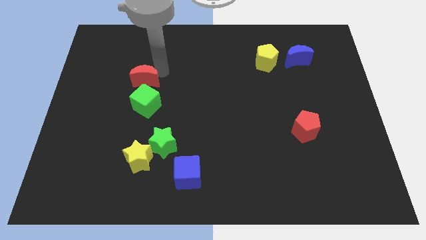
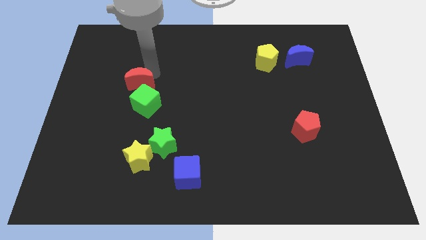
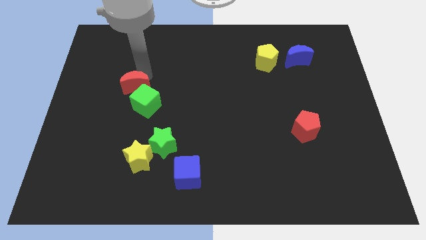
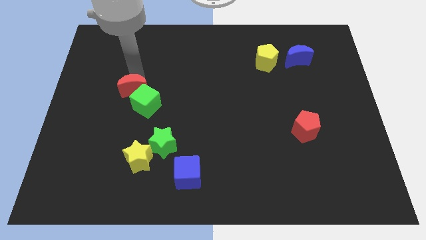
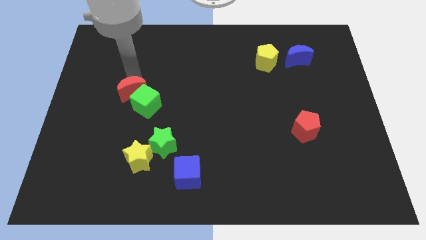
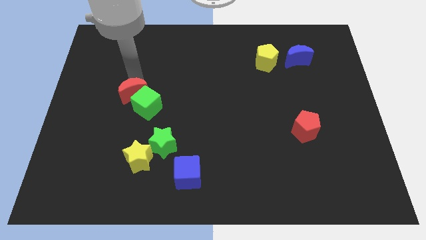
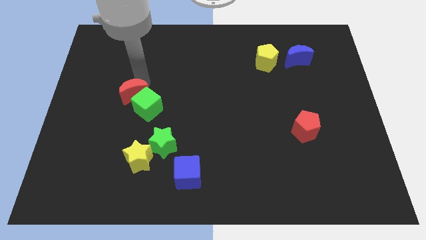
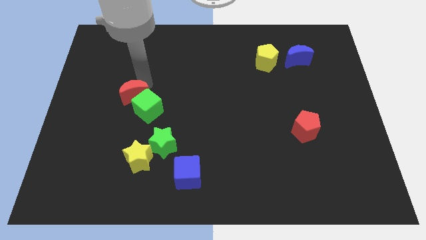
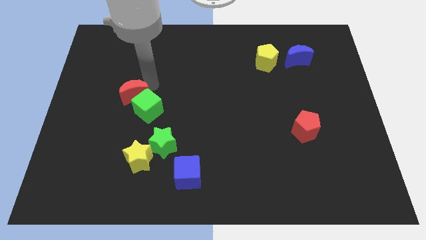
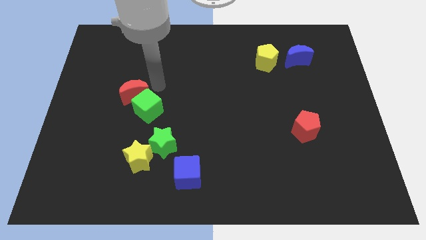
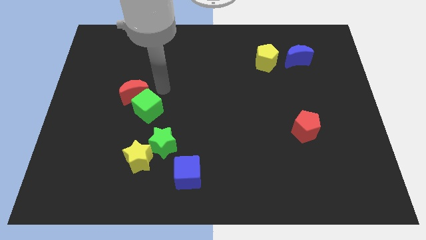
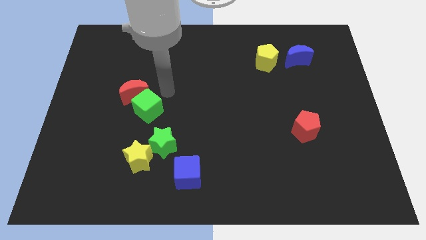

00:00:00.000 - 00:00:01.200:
push the red moon into the green cube

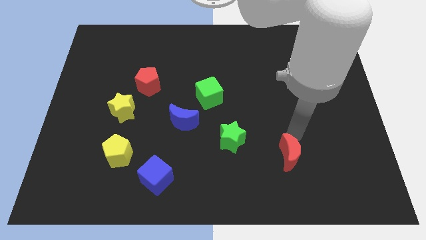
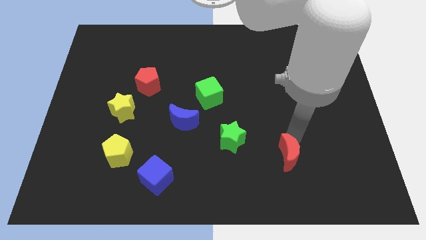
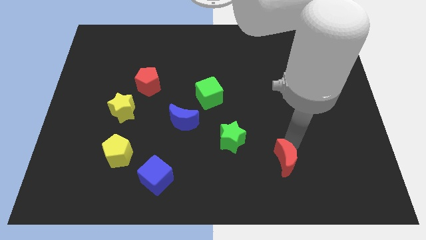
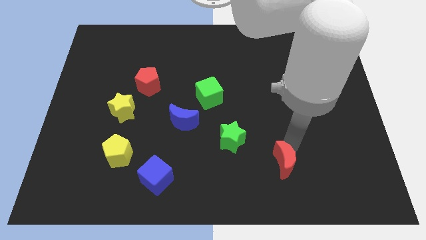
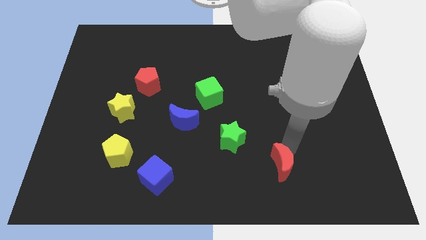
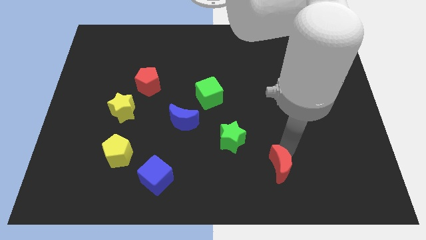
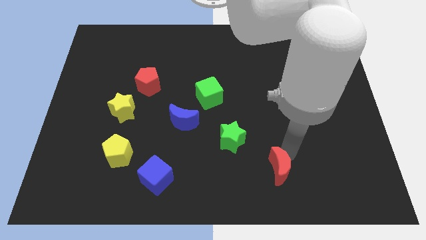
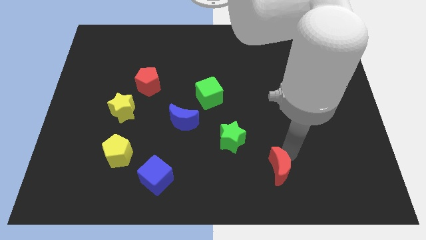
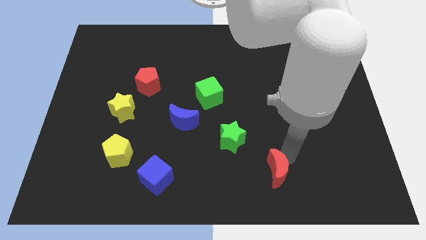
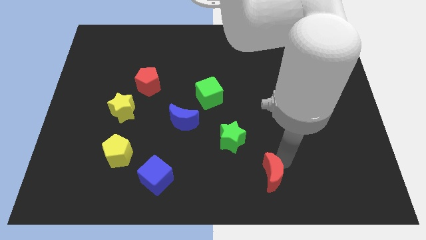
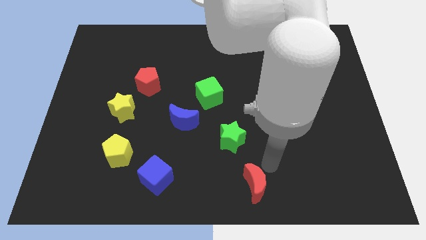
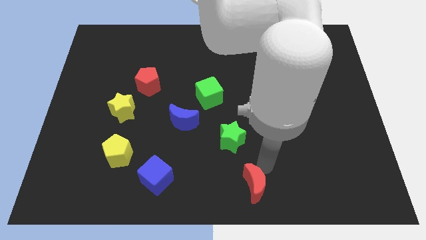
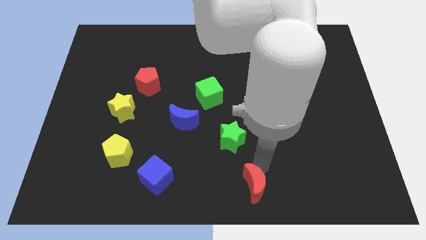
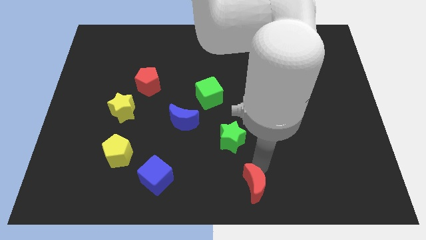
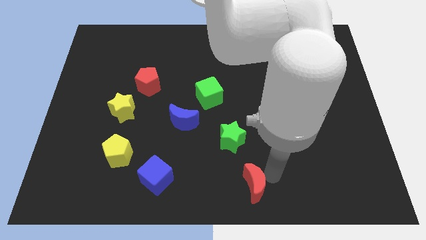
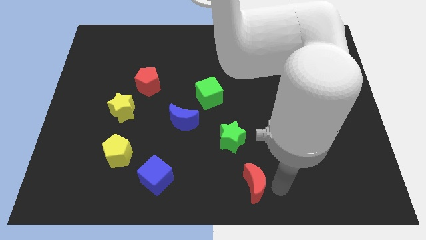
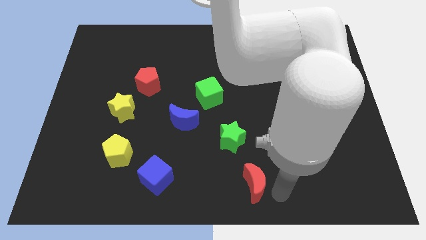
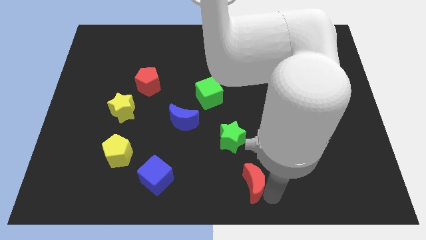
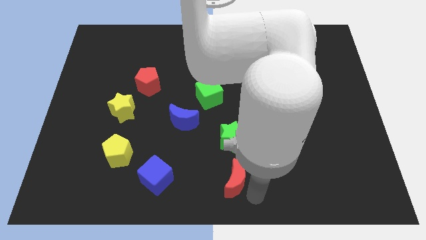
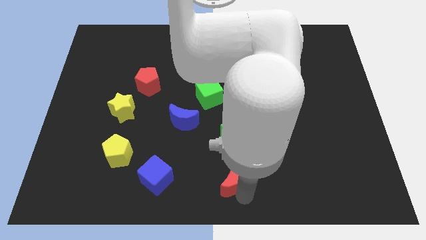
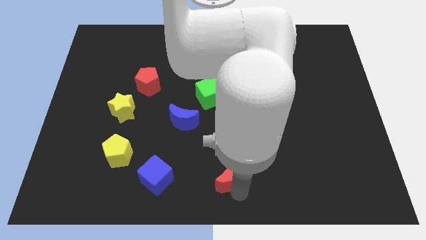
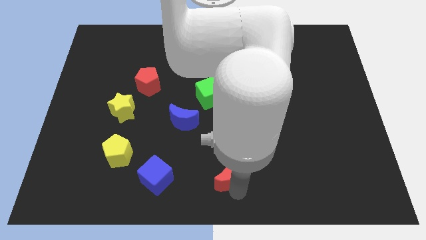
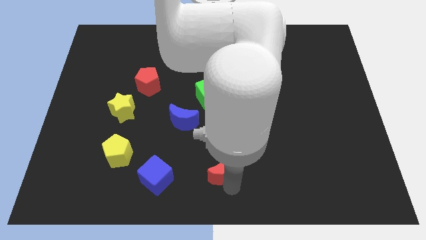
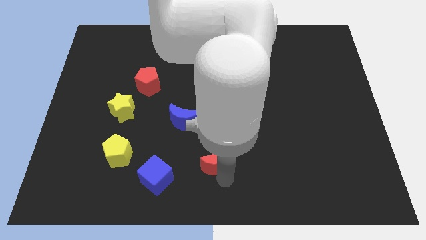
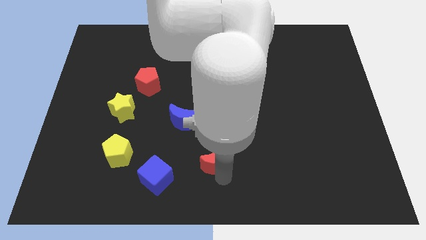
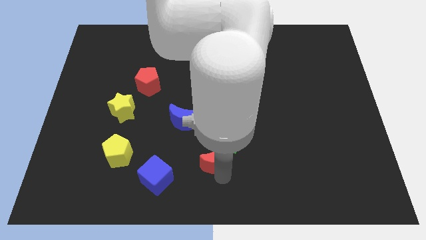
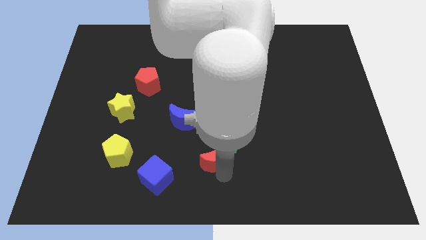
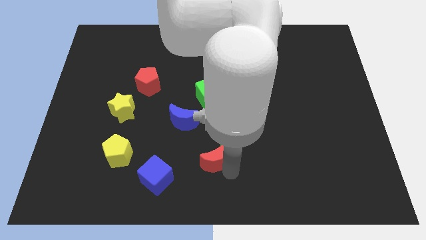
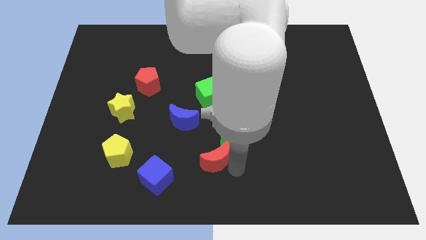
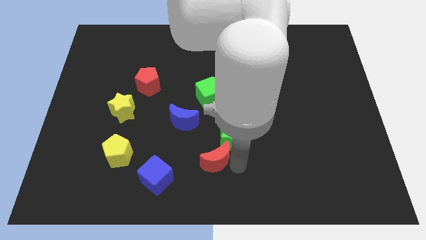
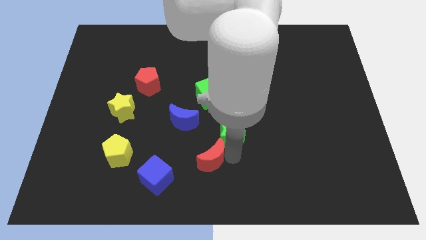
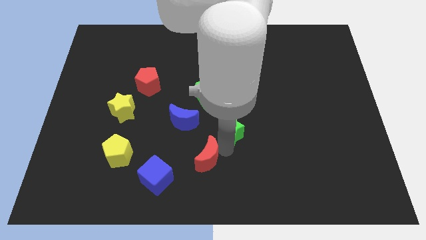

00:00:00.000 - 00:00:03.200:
push red crescent in to green star

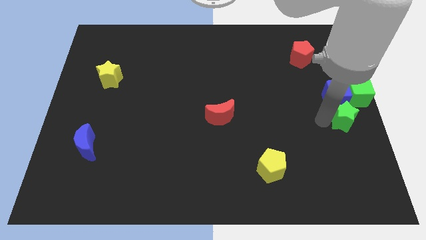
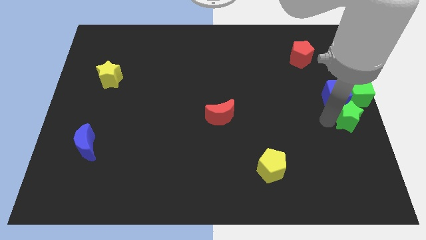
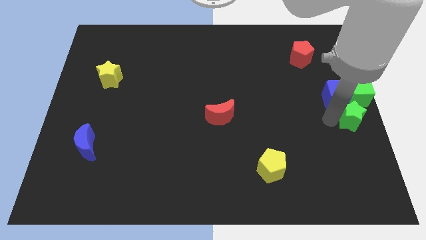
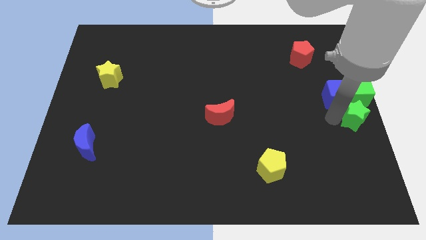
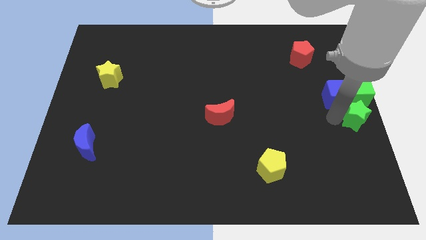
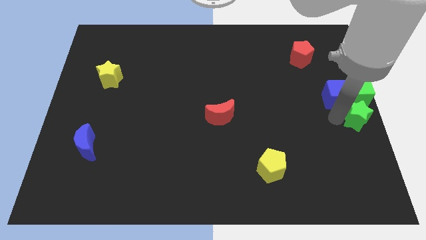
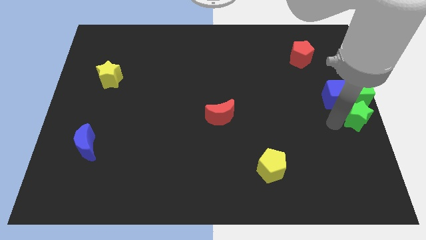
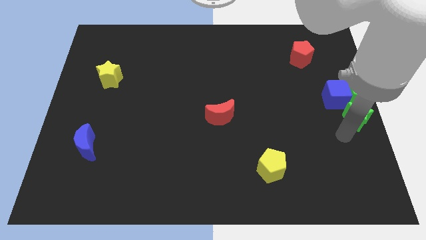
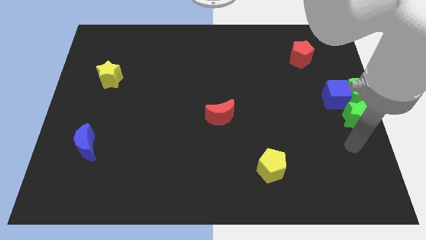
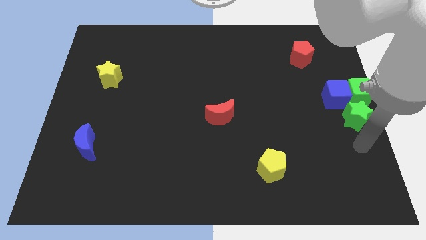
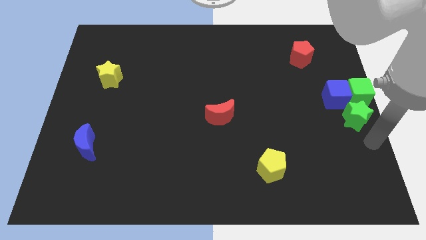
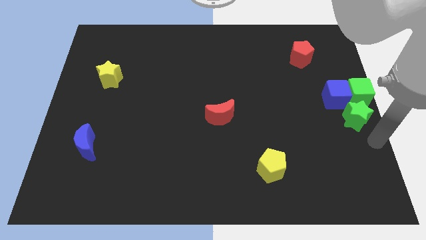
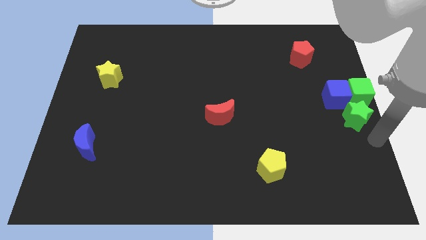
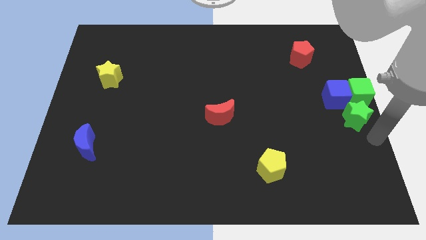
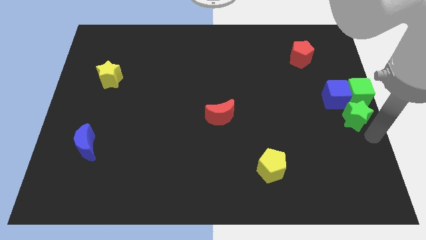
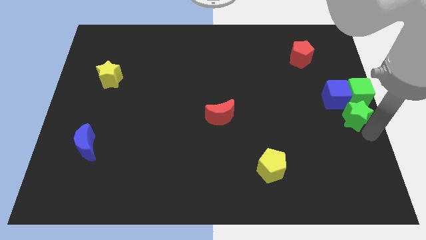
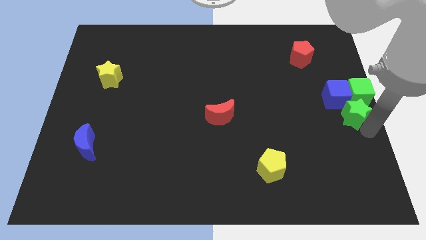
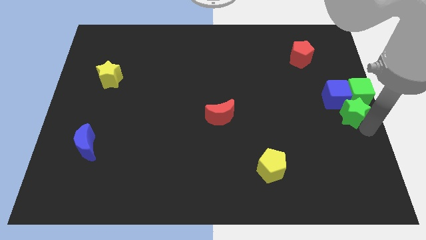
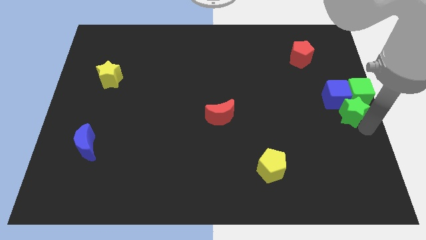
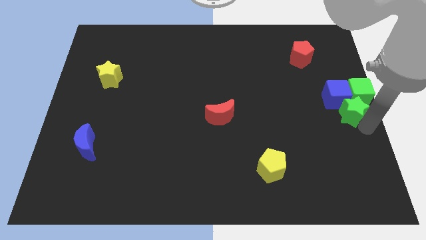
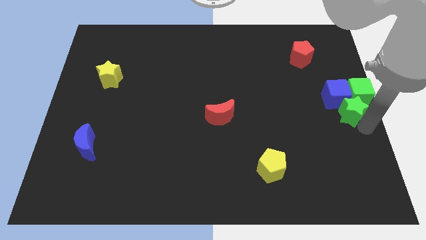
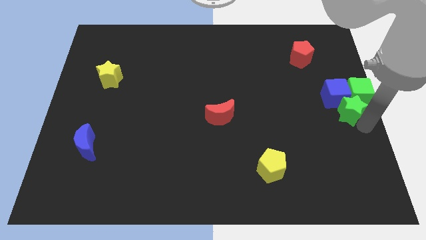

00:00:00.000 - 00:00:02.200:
move the green star into the group of blocks

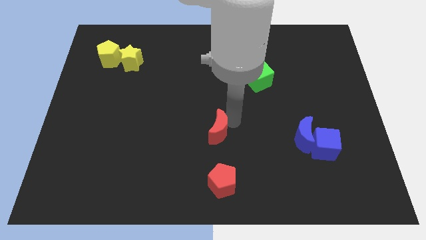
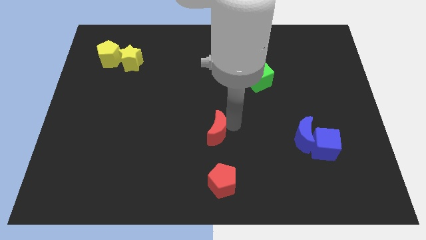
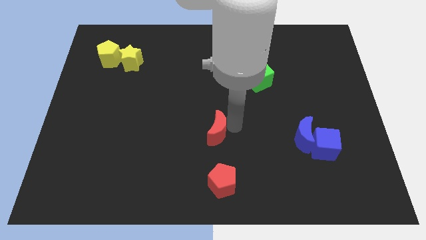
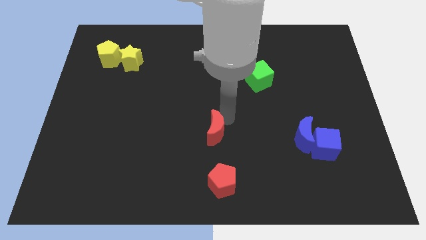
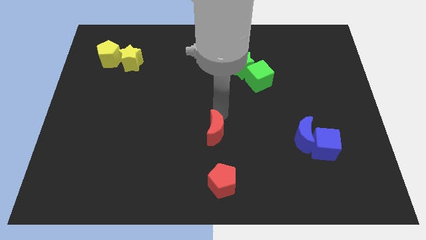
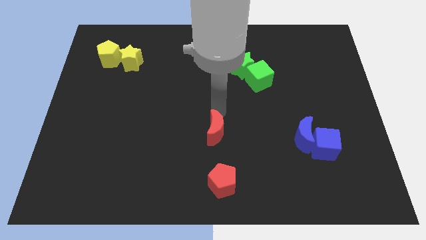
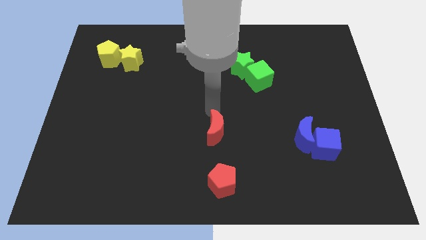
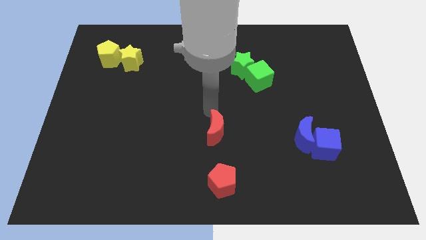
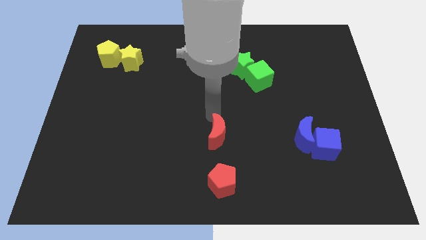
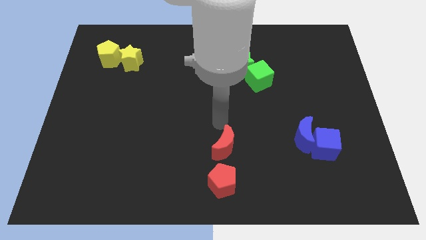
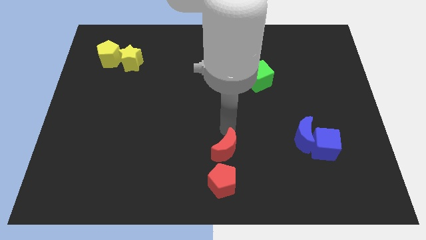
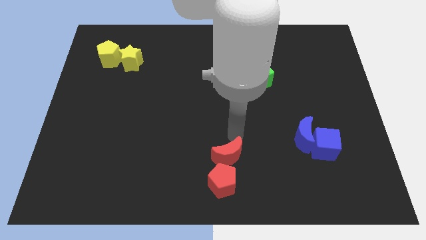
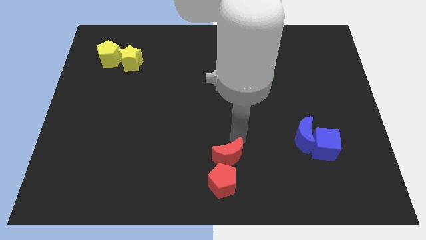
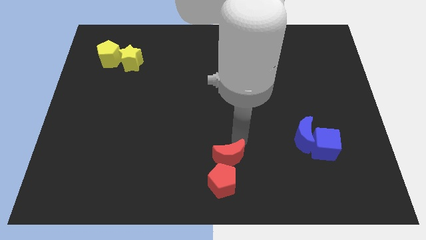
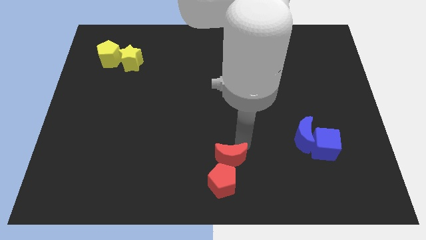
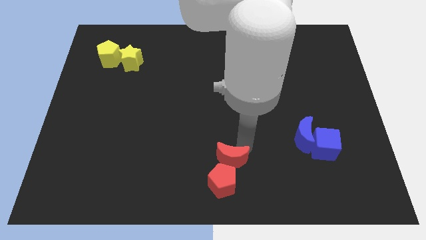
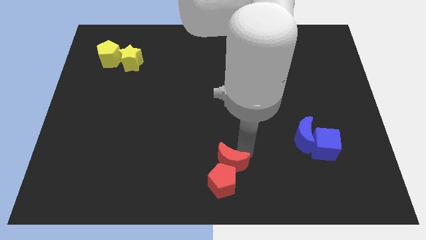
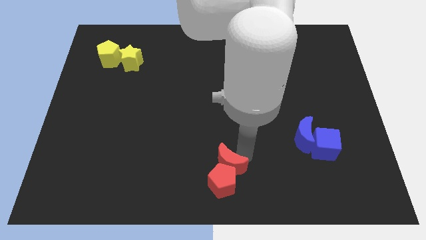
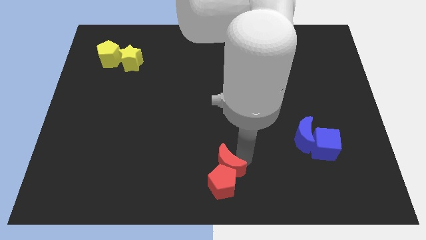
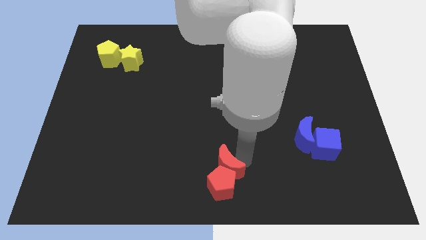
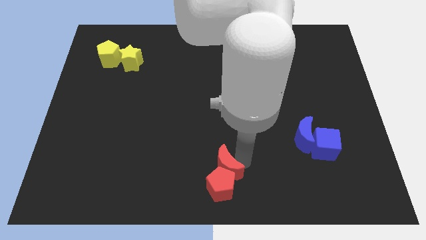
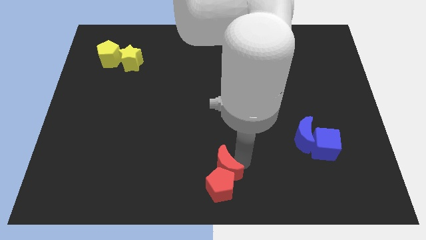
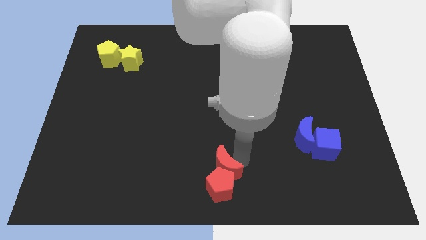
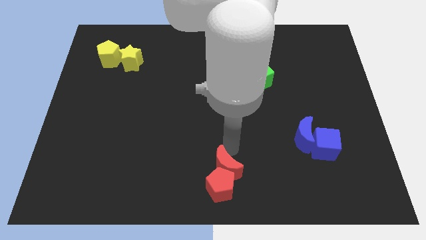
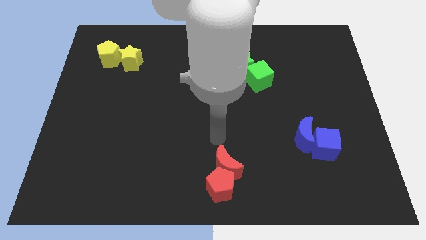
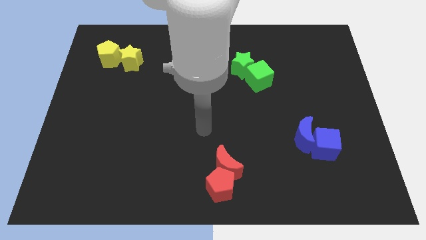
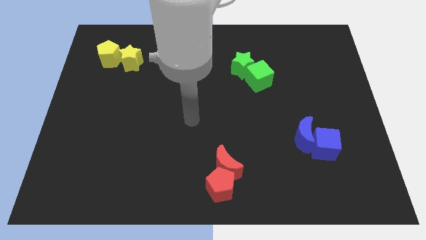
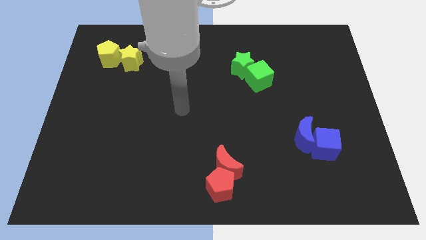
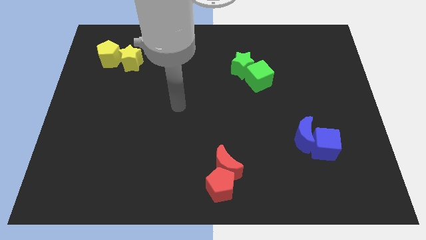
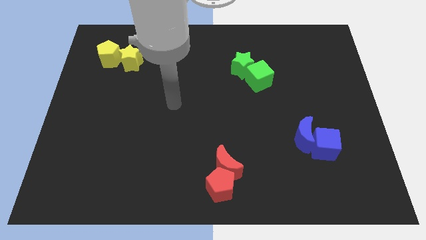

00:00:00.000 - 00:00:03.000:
place the red crescent above the red pentagon
